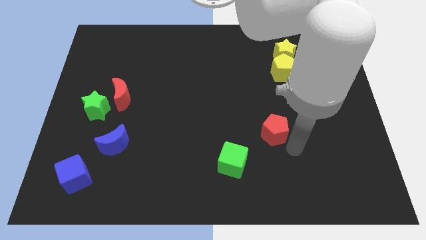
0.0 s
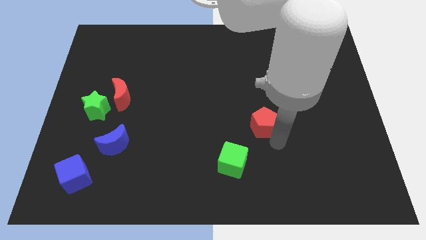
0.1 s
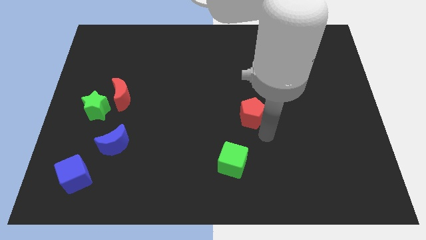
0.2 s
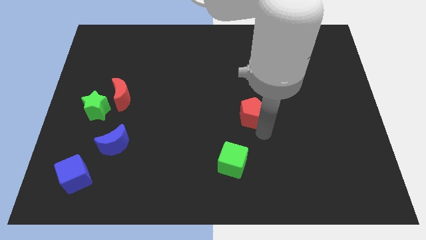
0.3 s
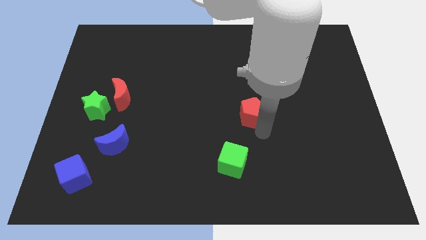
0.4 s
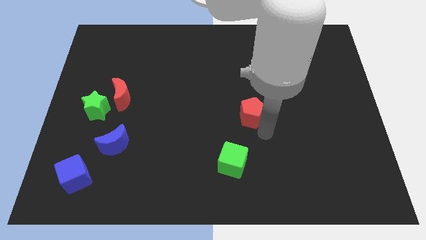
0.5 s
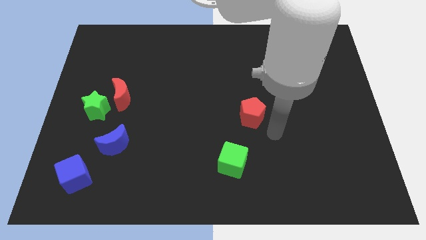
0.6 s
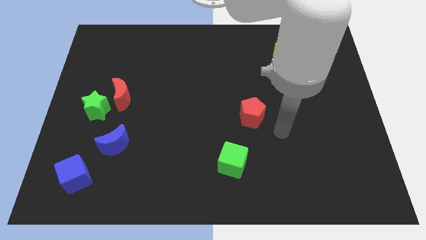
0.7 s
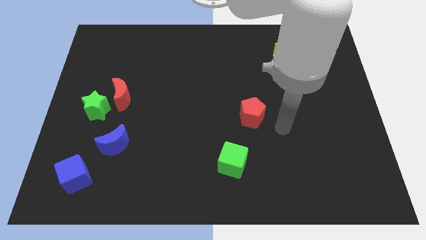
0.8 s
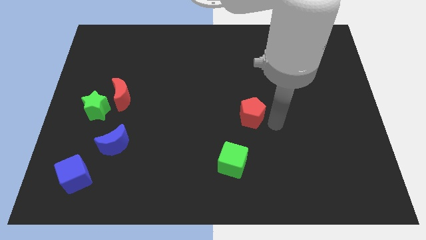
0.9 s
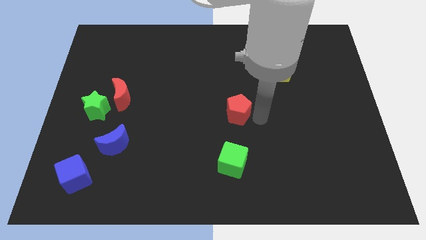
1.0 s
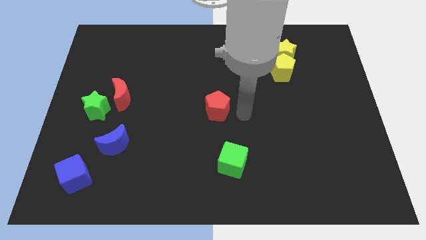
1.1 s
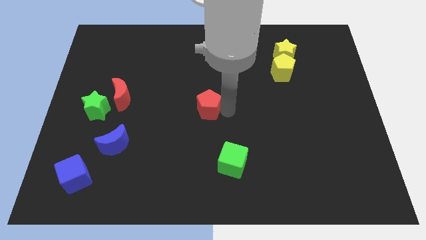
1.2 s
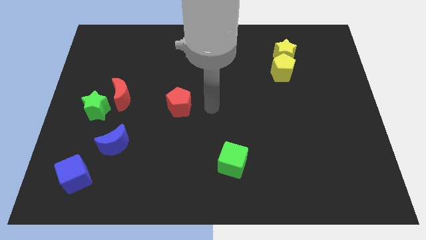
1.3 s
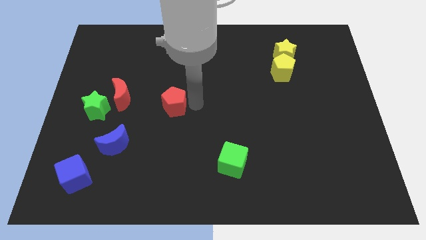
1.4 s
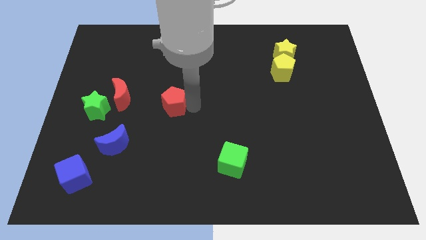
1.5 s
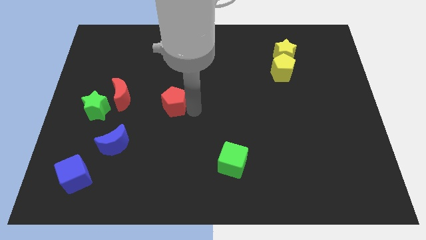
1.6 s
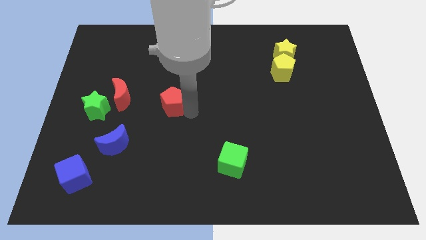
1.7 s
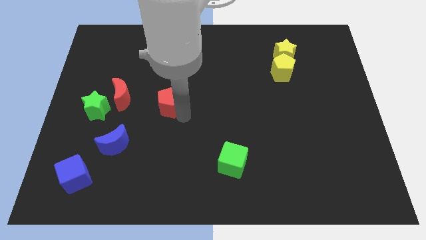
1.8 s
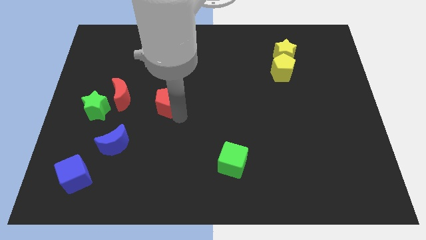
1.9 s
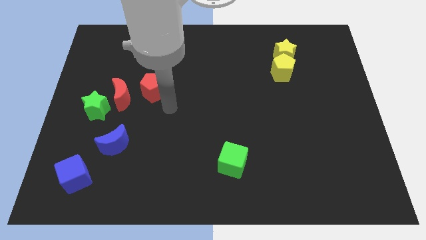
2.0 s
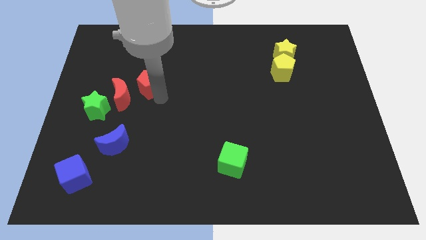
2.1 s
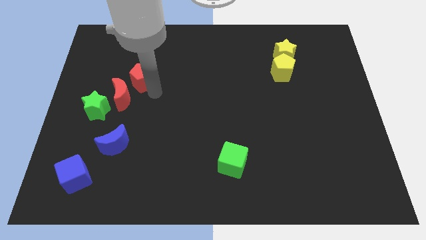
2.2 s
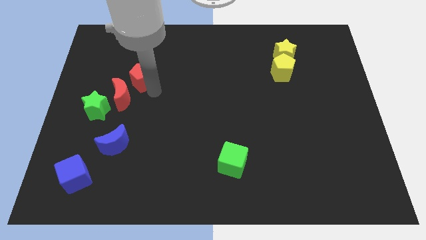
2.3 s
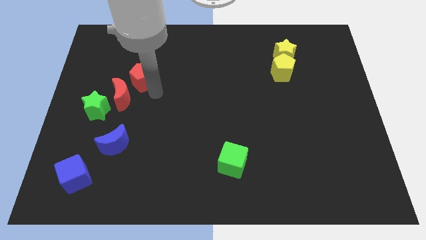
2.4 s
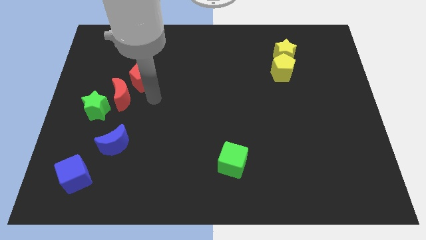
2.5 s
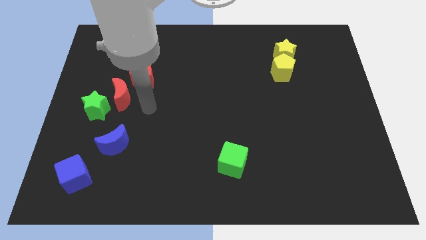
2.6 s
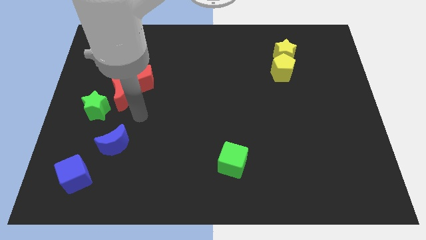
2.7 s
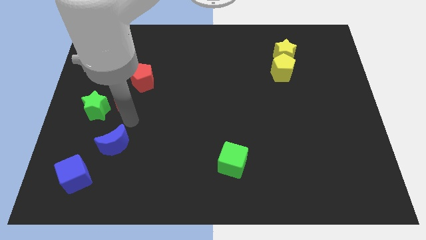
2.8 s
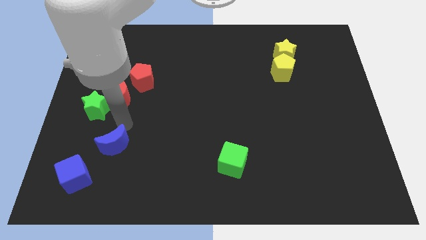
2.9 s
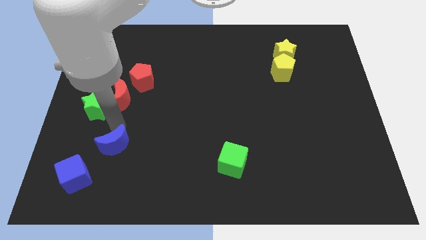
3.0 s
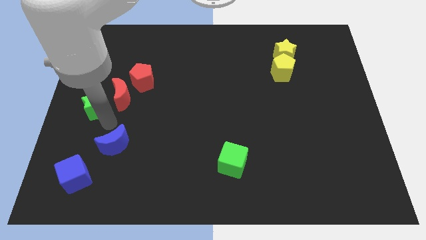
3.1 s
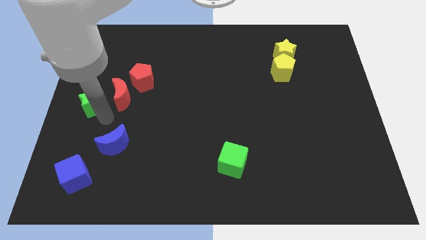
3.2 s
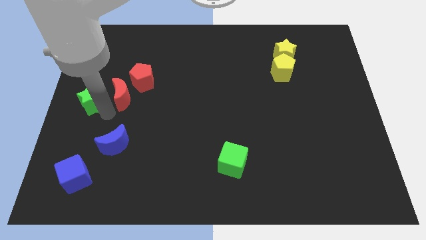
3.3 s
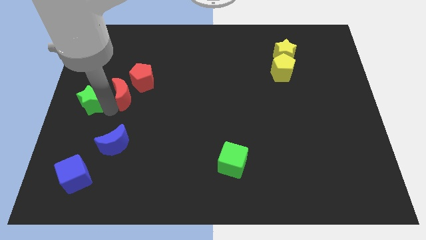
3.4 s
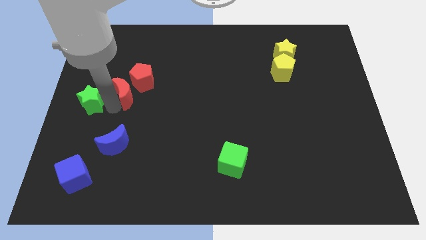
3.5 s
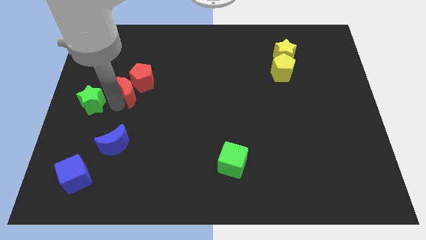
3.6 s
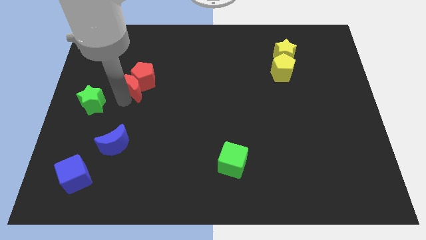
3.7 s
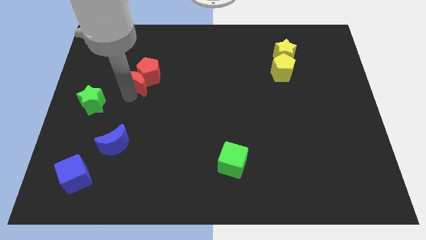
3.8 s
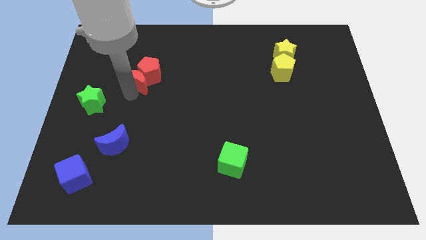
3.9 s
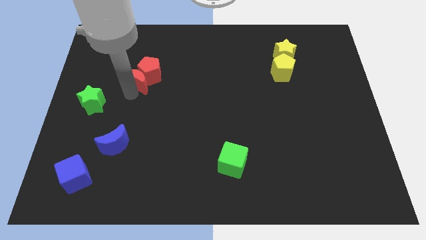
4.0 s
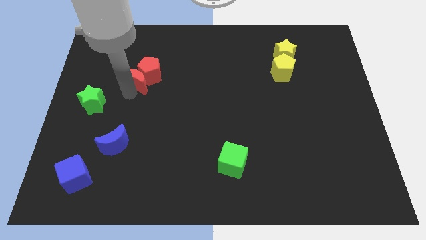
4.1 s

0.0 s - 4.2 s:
push red moon to the bottom of red pentagon

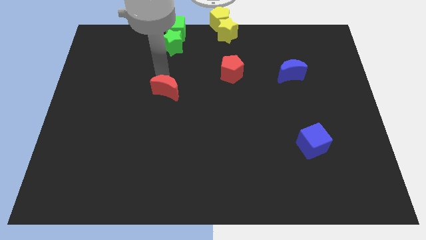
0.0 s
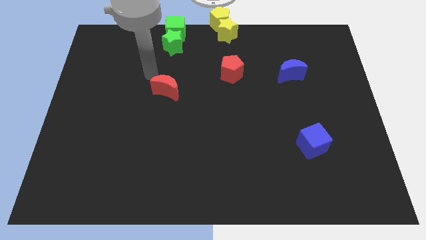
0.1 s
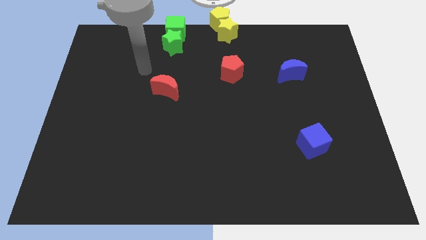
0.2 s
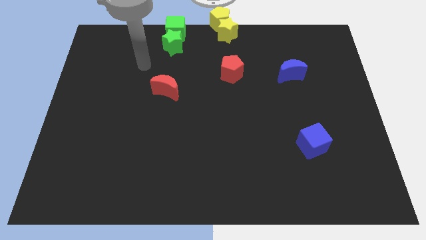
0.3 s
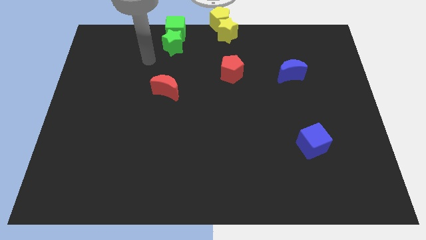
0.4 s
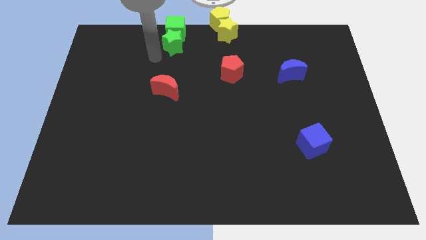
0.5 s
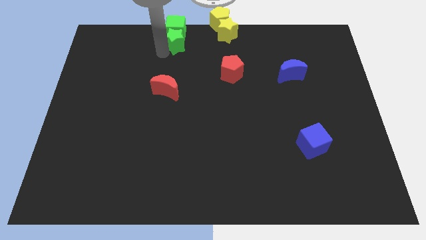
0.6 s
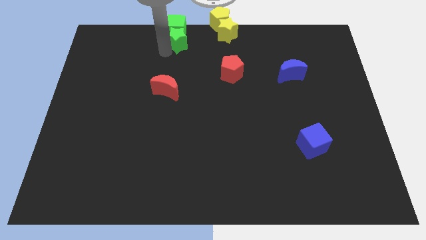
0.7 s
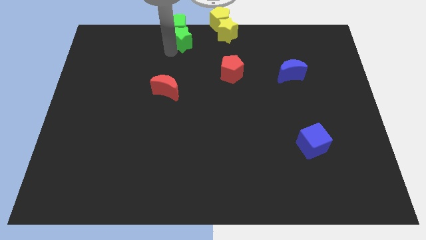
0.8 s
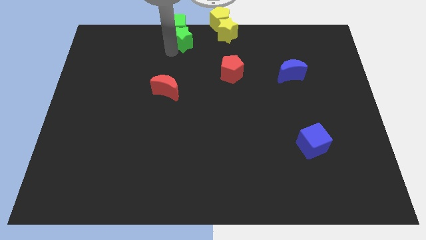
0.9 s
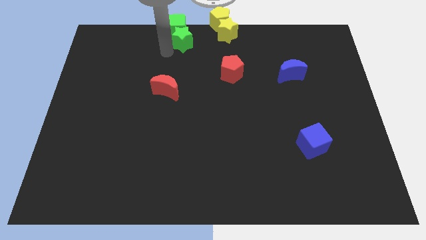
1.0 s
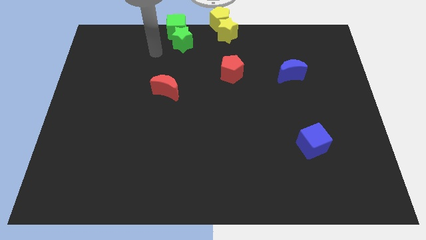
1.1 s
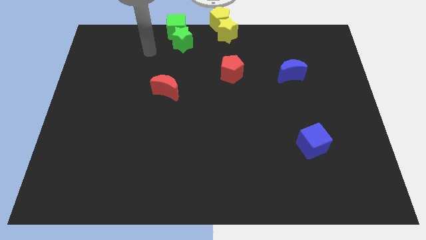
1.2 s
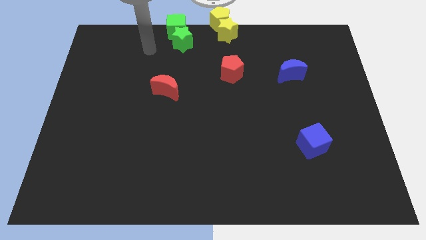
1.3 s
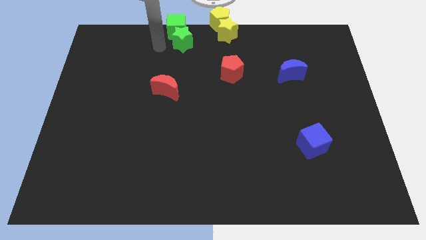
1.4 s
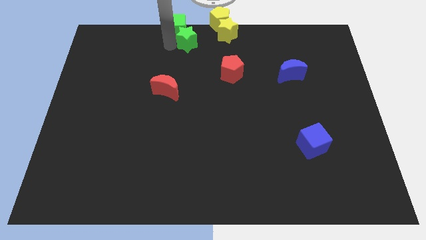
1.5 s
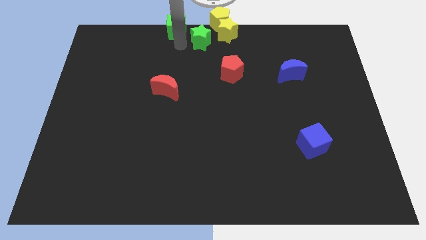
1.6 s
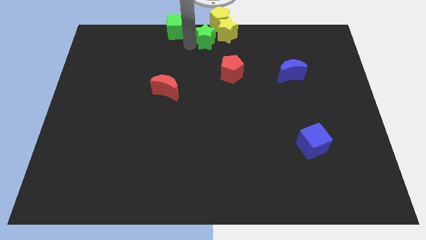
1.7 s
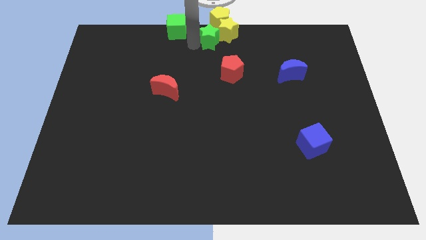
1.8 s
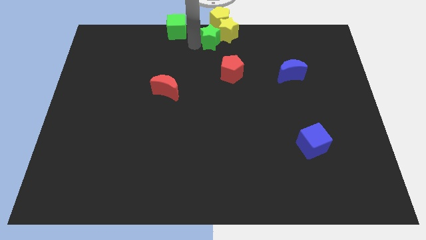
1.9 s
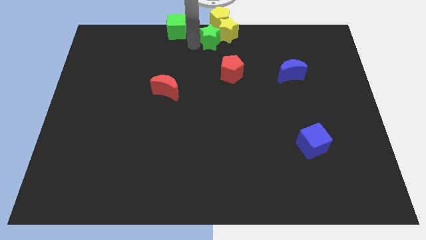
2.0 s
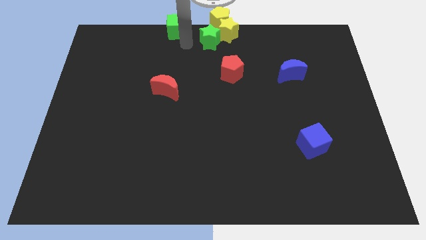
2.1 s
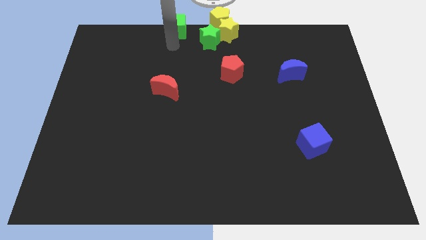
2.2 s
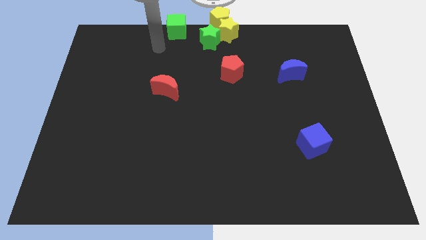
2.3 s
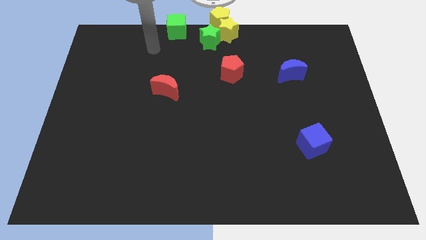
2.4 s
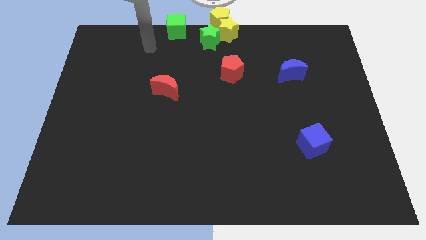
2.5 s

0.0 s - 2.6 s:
push green star into the yellow star

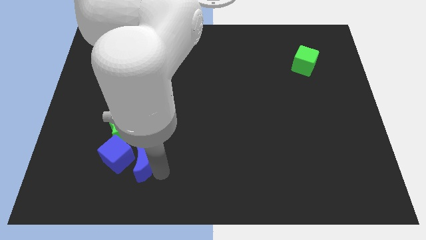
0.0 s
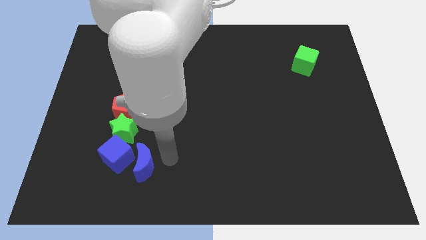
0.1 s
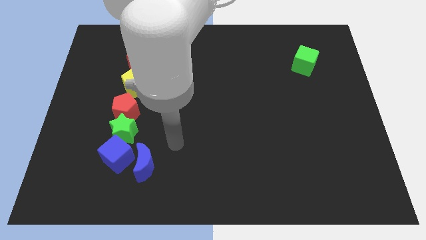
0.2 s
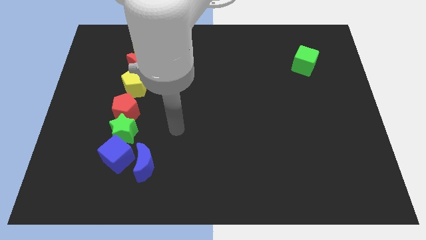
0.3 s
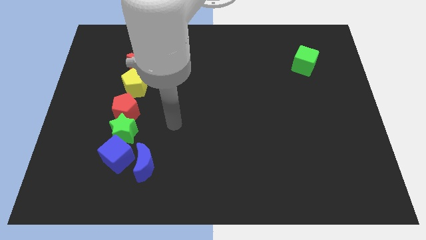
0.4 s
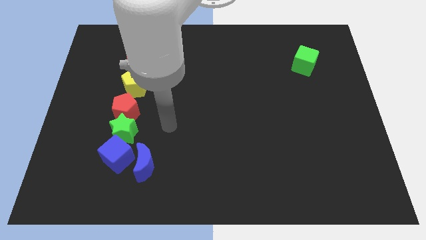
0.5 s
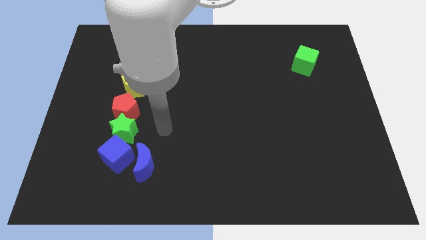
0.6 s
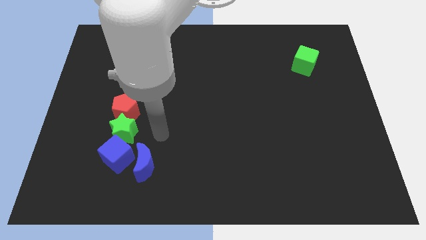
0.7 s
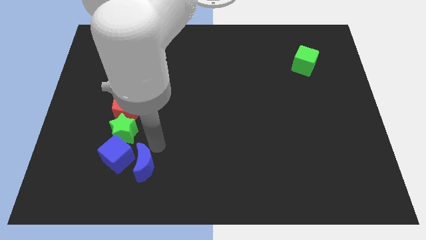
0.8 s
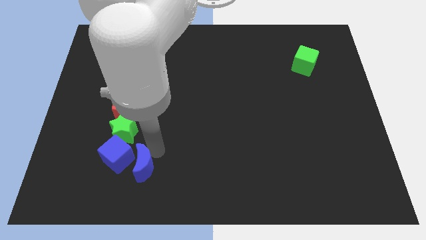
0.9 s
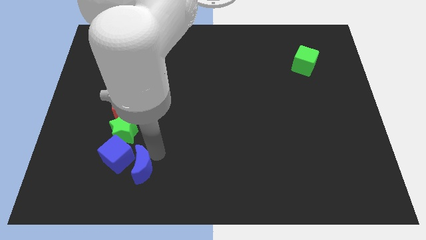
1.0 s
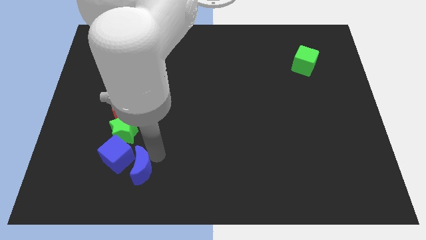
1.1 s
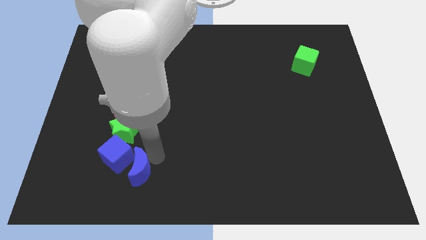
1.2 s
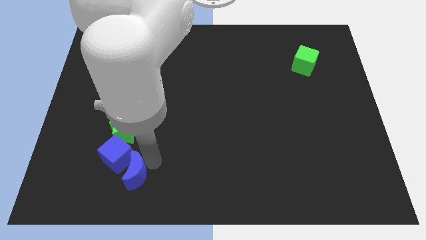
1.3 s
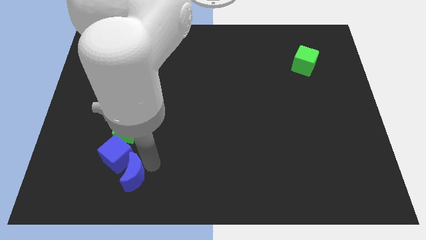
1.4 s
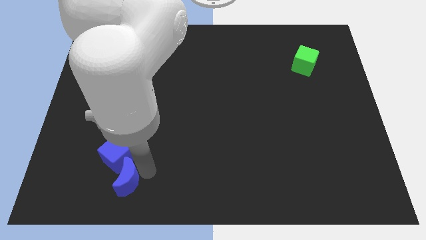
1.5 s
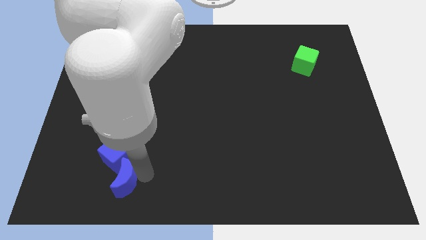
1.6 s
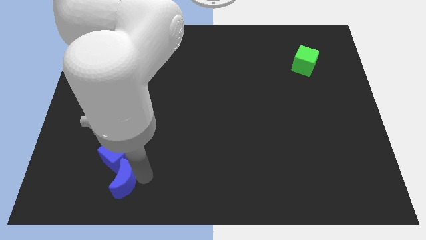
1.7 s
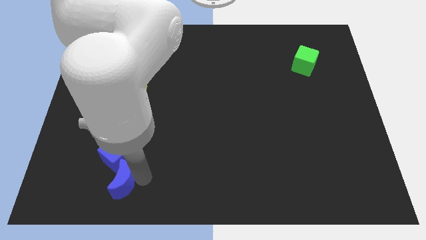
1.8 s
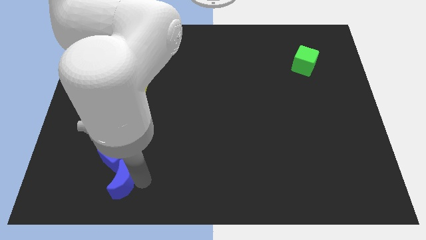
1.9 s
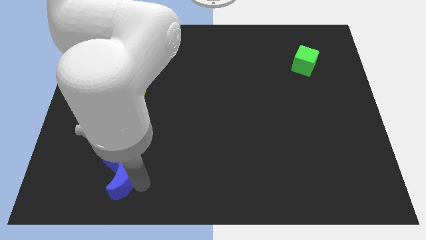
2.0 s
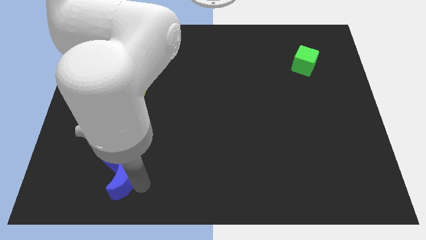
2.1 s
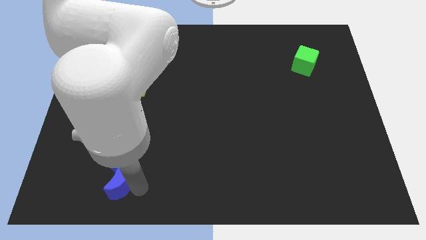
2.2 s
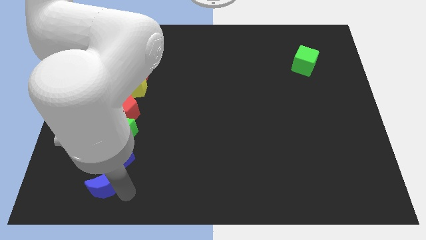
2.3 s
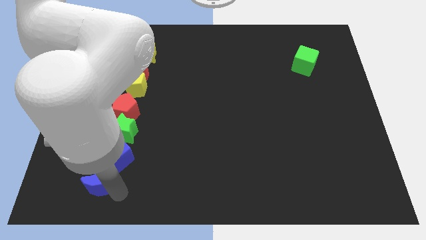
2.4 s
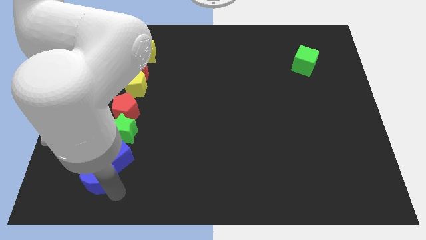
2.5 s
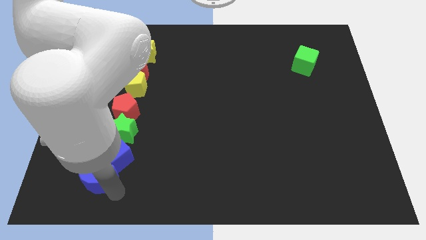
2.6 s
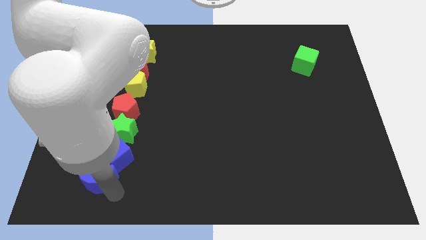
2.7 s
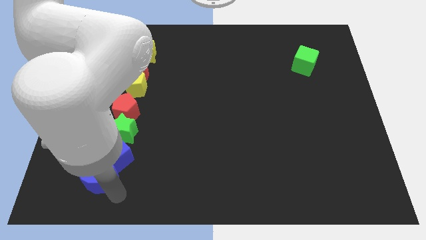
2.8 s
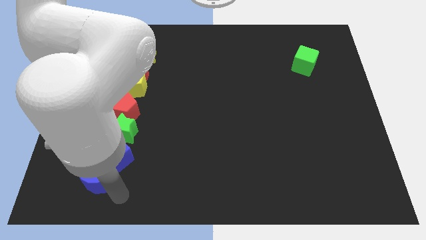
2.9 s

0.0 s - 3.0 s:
push the blue crescent to the bottom of the blue cube
